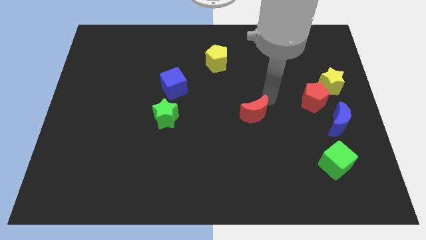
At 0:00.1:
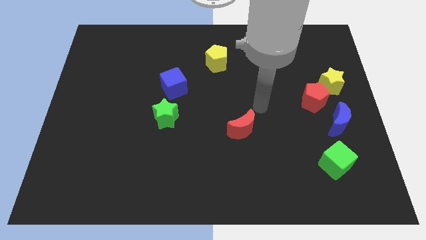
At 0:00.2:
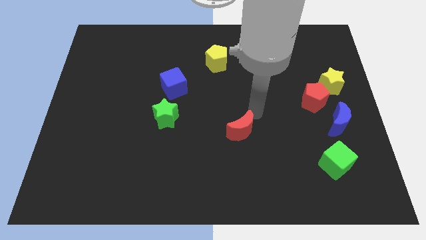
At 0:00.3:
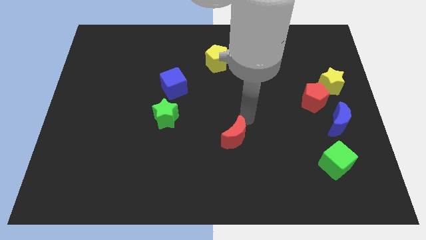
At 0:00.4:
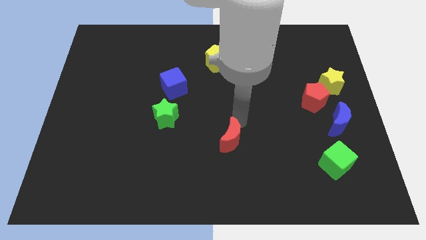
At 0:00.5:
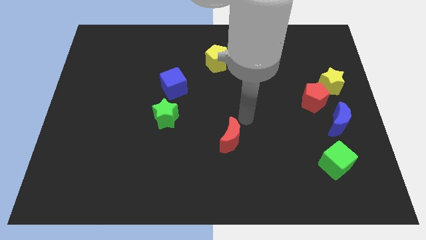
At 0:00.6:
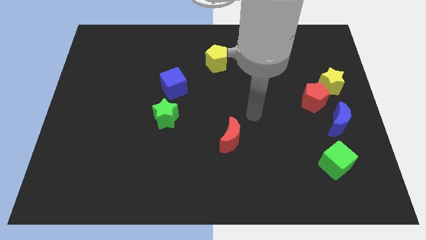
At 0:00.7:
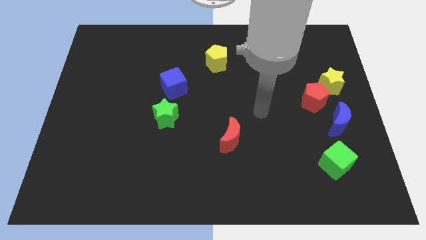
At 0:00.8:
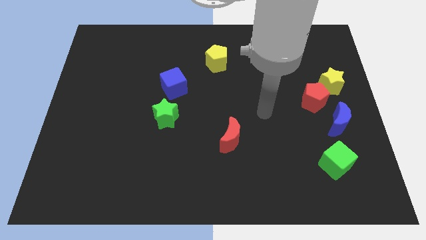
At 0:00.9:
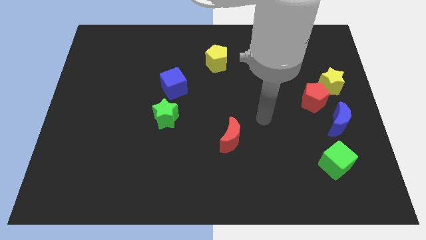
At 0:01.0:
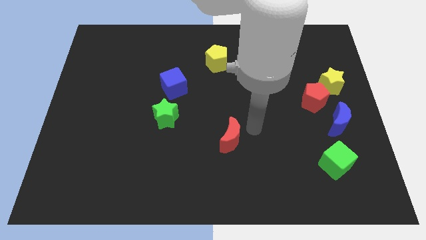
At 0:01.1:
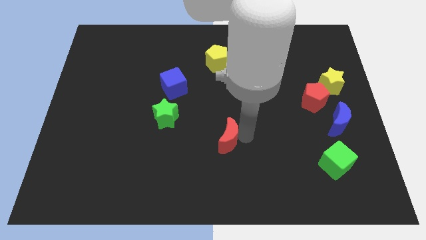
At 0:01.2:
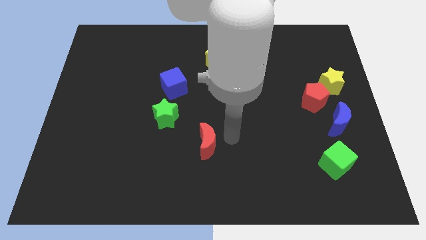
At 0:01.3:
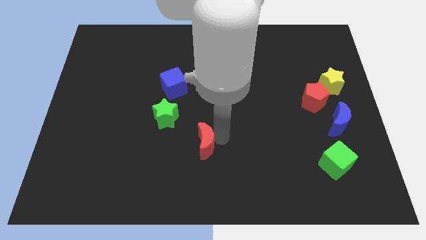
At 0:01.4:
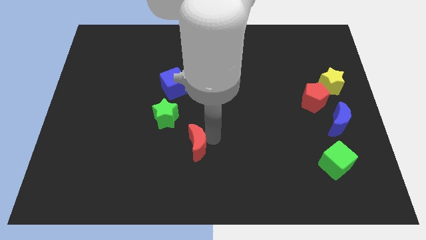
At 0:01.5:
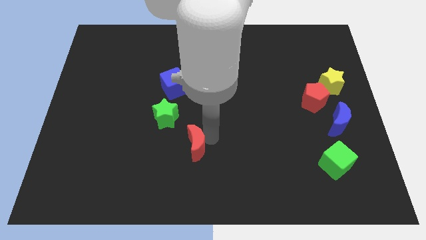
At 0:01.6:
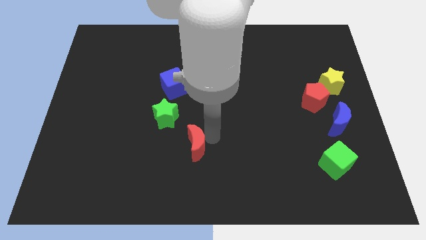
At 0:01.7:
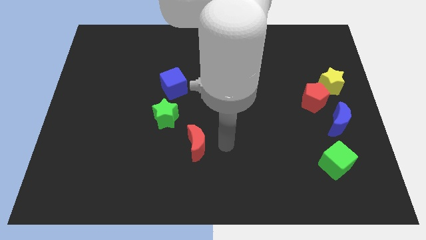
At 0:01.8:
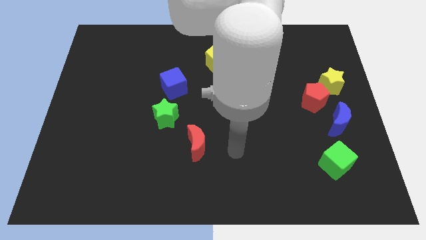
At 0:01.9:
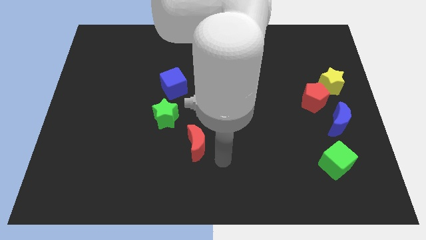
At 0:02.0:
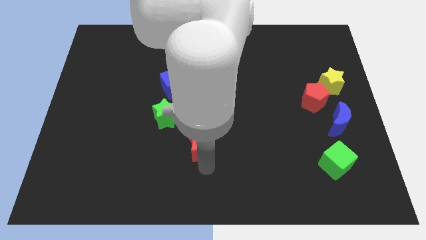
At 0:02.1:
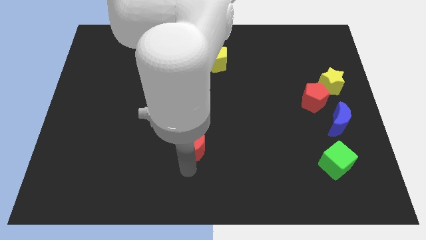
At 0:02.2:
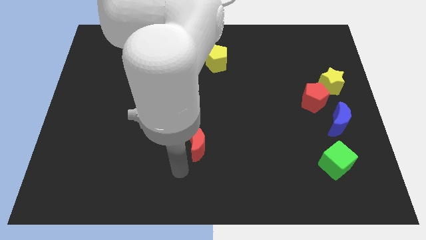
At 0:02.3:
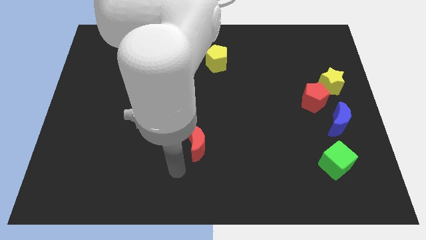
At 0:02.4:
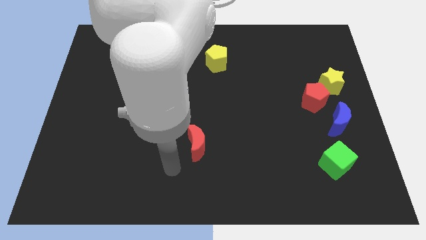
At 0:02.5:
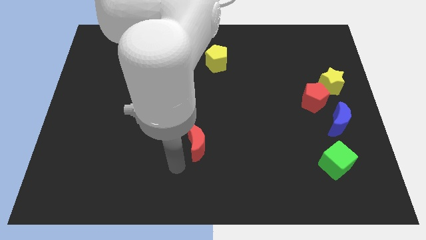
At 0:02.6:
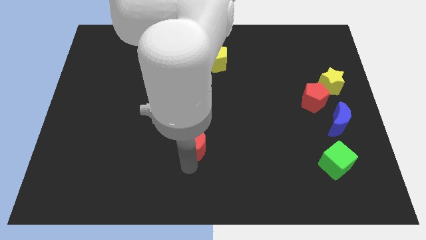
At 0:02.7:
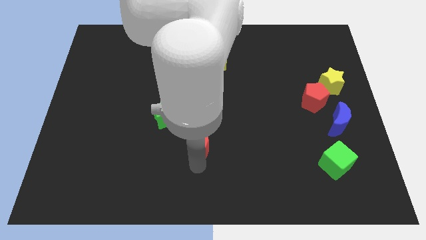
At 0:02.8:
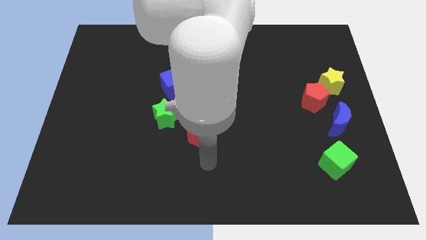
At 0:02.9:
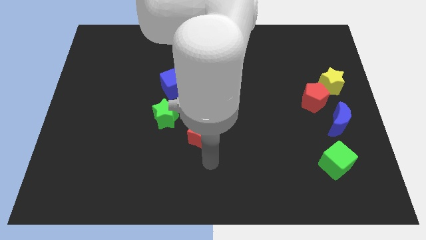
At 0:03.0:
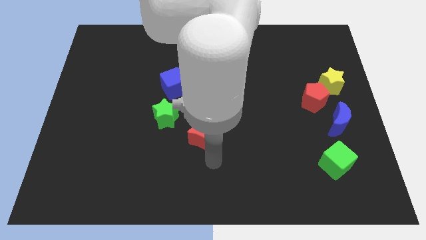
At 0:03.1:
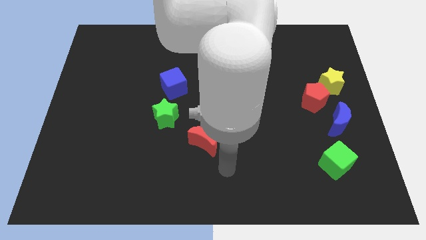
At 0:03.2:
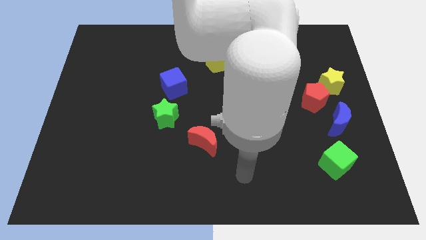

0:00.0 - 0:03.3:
place the red crescent to bottom right to green star

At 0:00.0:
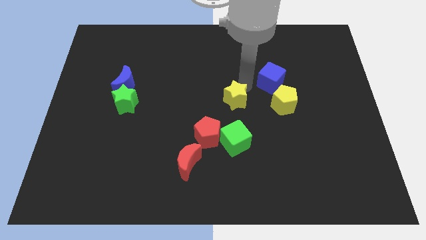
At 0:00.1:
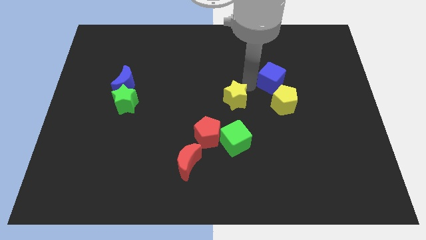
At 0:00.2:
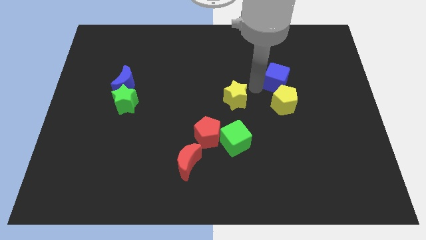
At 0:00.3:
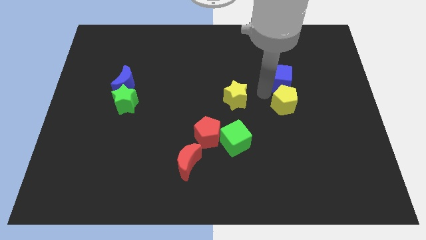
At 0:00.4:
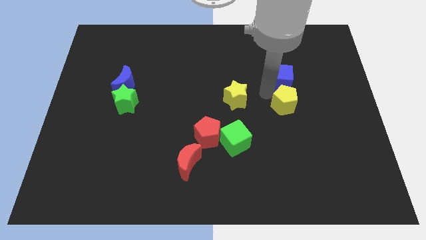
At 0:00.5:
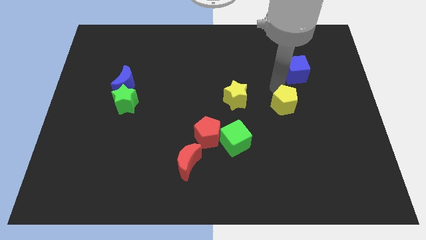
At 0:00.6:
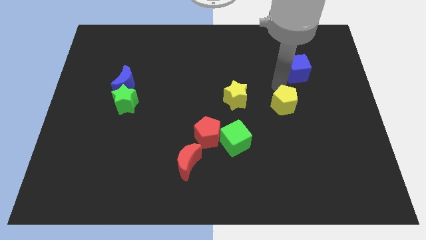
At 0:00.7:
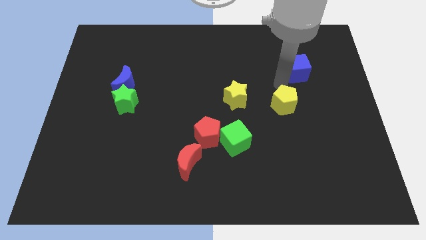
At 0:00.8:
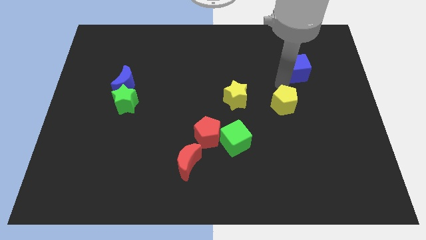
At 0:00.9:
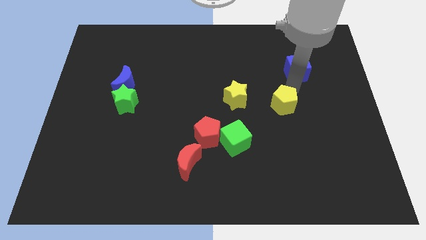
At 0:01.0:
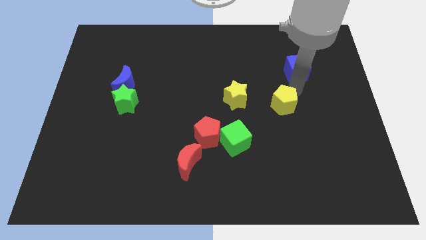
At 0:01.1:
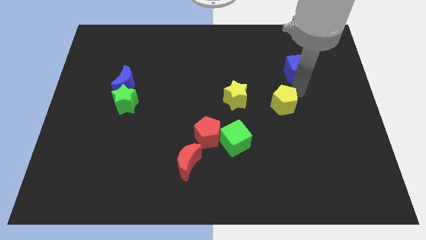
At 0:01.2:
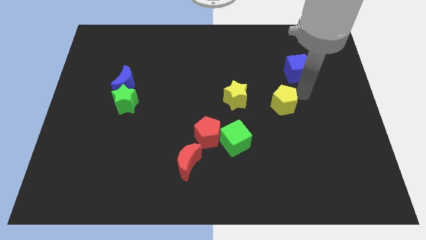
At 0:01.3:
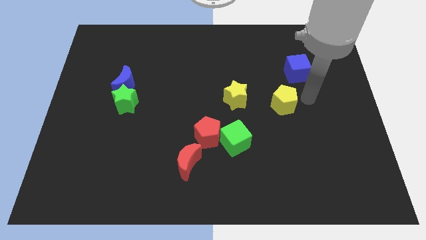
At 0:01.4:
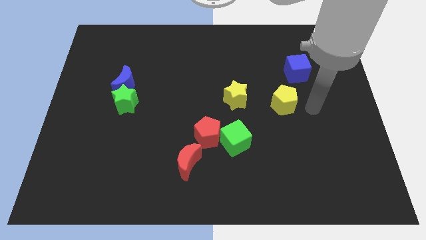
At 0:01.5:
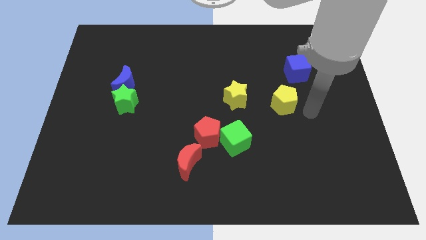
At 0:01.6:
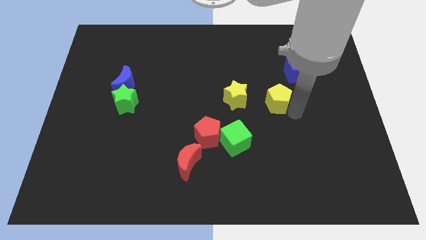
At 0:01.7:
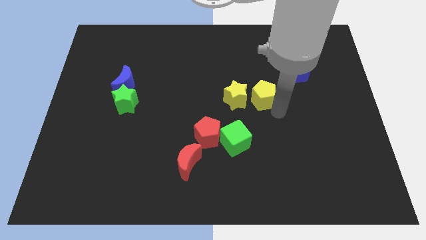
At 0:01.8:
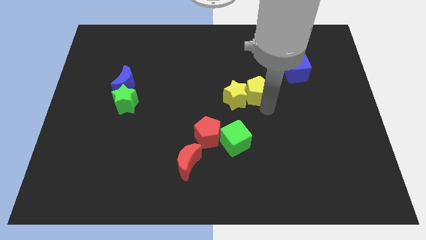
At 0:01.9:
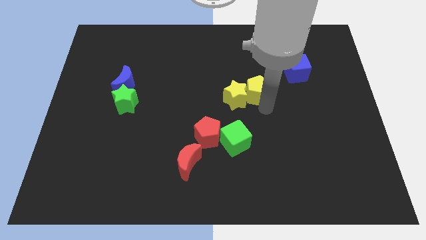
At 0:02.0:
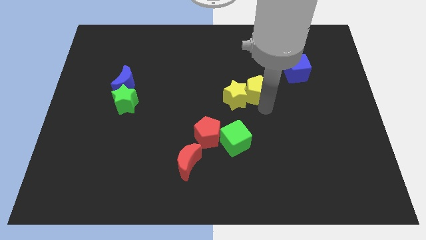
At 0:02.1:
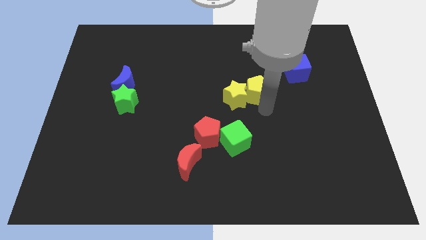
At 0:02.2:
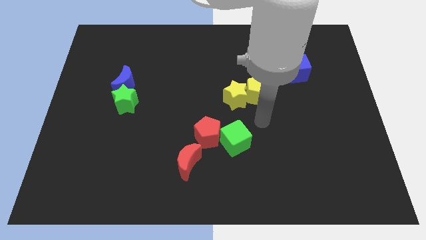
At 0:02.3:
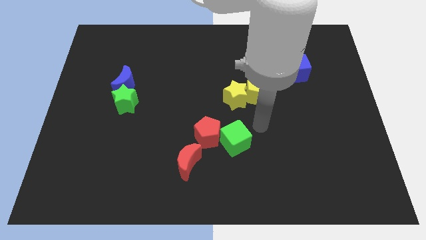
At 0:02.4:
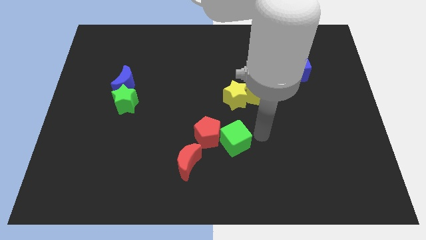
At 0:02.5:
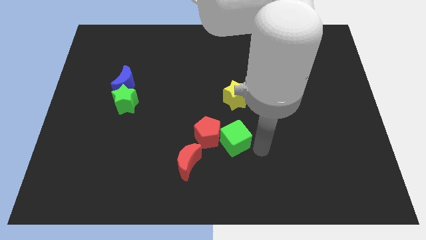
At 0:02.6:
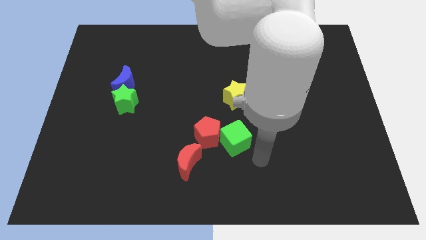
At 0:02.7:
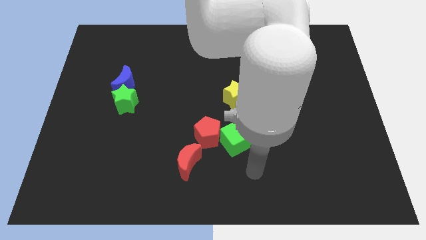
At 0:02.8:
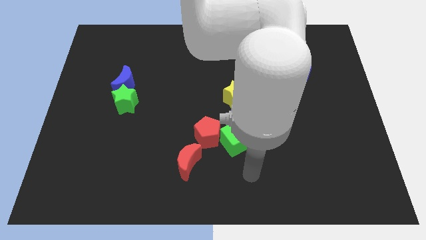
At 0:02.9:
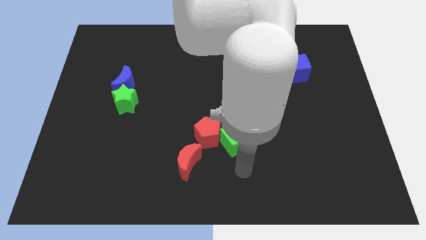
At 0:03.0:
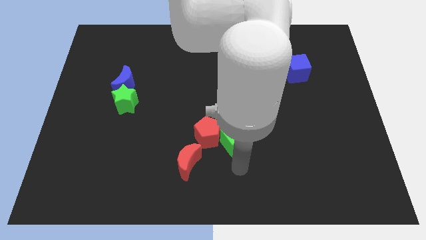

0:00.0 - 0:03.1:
push the yellow pentagon to the right of the yellow star

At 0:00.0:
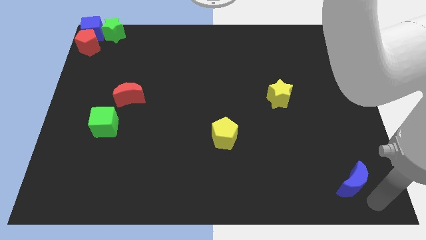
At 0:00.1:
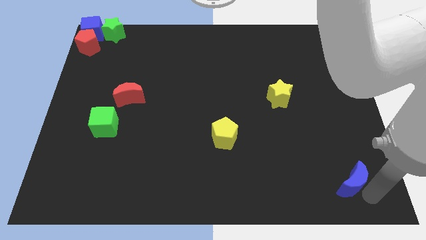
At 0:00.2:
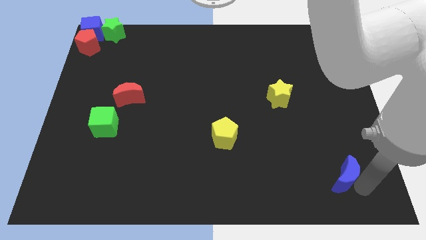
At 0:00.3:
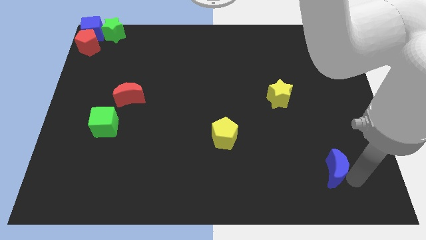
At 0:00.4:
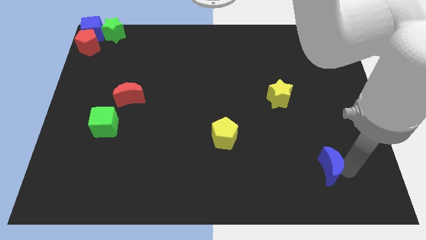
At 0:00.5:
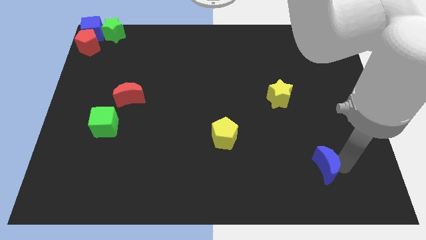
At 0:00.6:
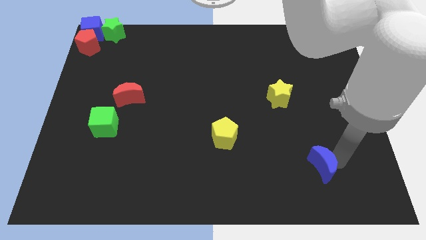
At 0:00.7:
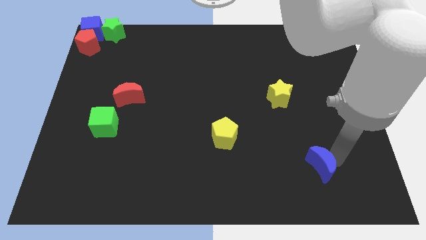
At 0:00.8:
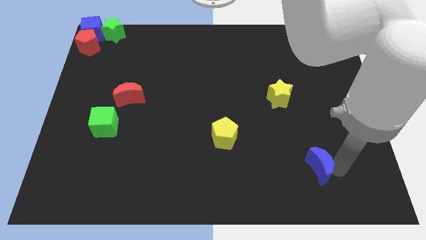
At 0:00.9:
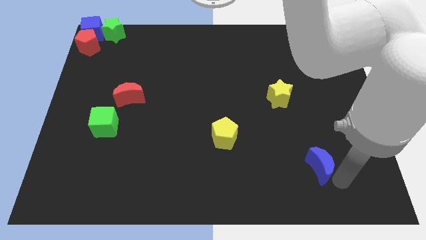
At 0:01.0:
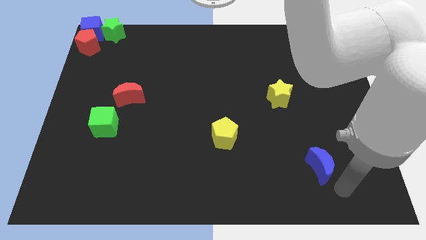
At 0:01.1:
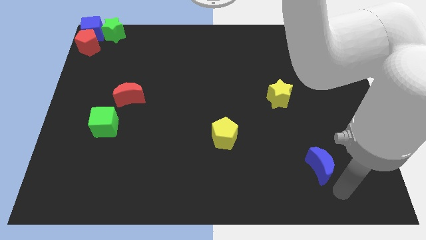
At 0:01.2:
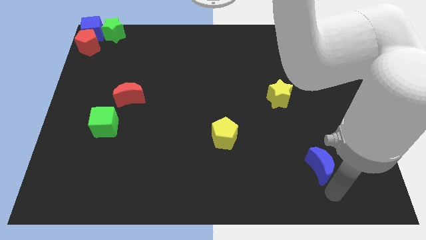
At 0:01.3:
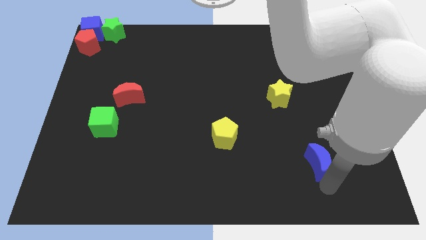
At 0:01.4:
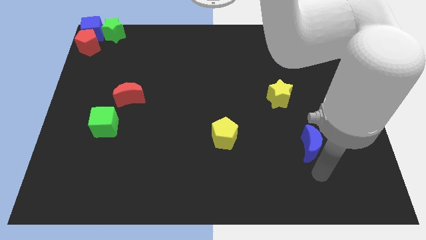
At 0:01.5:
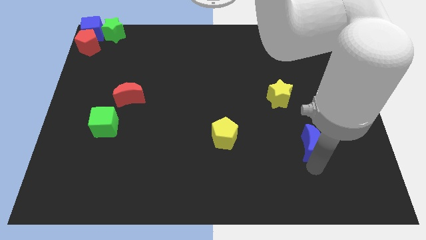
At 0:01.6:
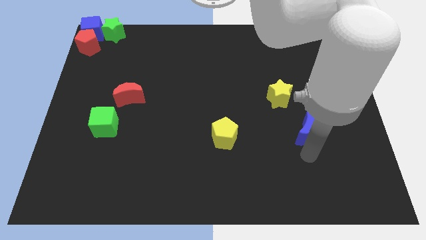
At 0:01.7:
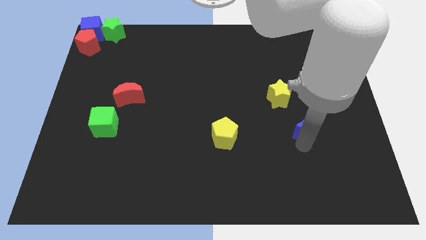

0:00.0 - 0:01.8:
slide the blue moon horizontally to the right side of the yellow pentagon

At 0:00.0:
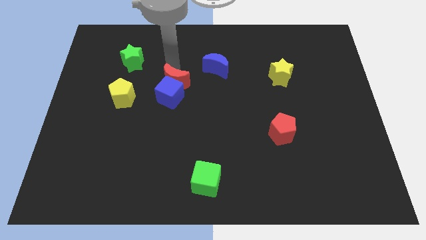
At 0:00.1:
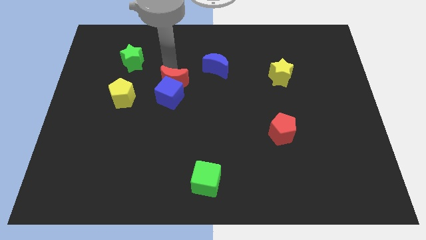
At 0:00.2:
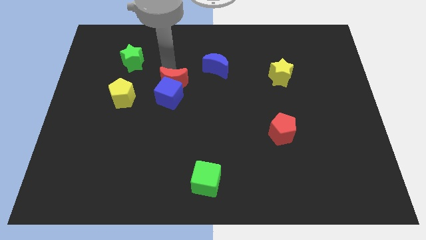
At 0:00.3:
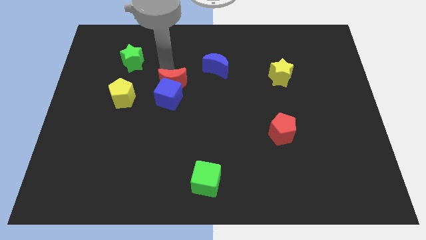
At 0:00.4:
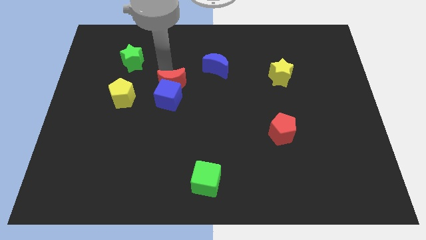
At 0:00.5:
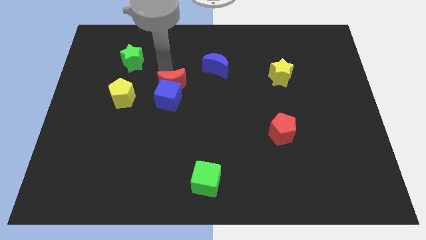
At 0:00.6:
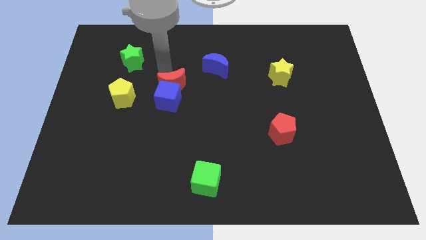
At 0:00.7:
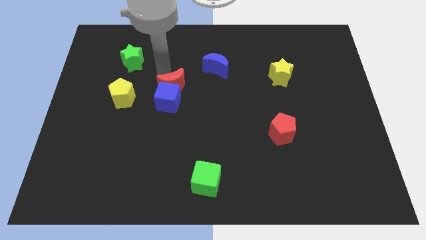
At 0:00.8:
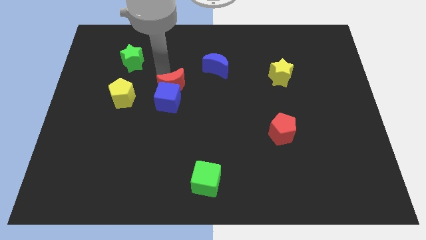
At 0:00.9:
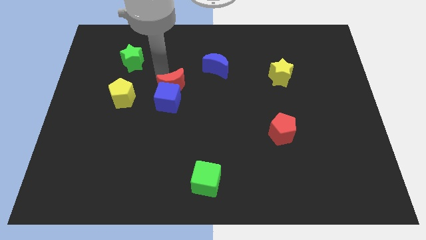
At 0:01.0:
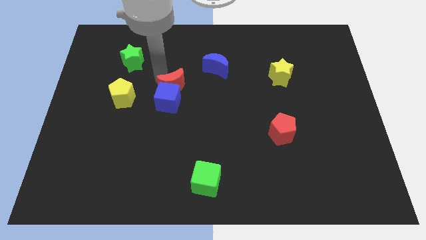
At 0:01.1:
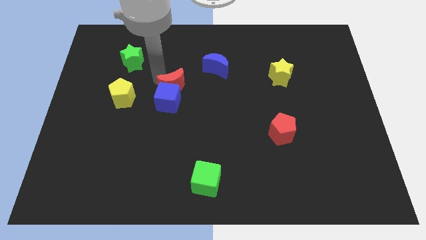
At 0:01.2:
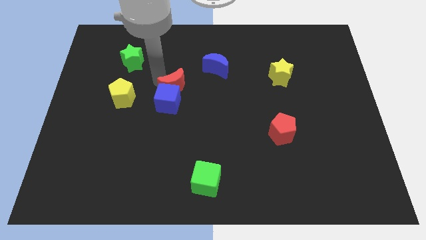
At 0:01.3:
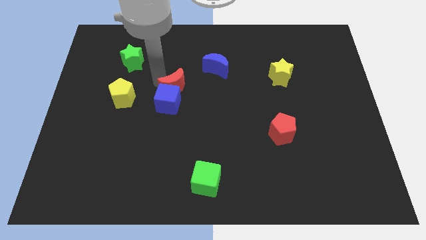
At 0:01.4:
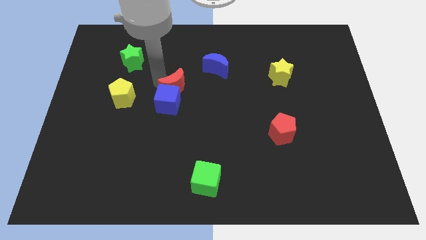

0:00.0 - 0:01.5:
push the red moon into the blue cube
